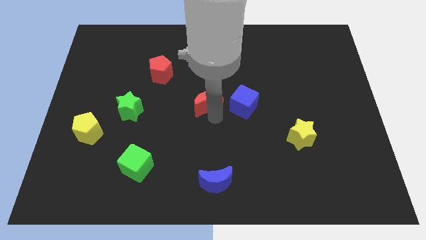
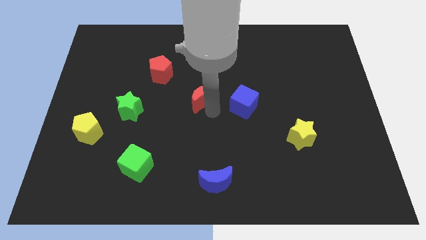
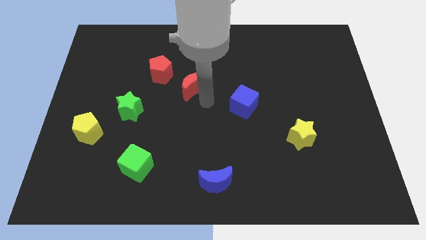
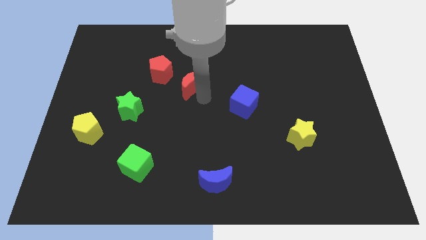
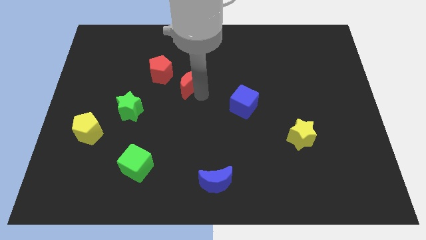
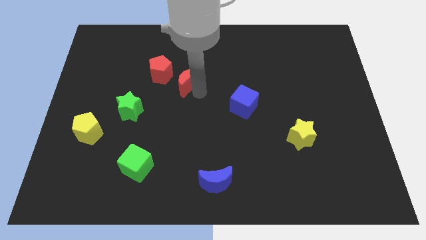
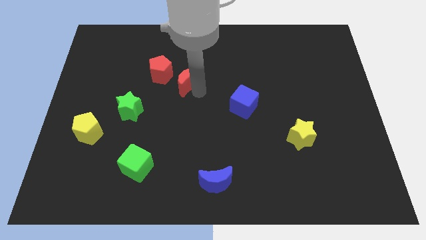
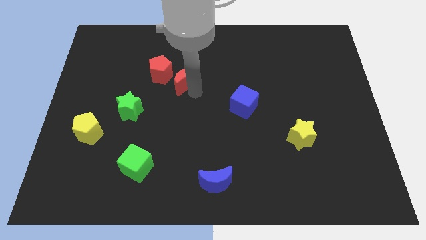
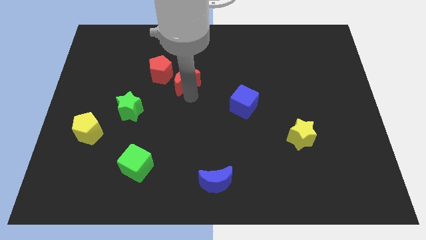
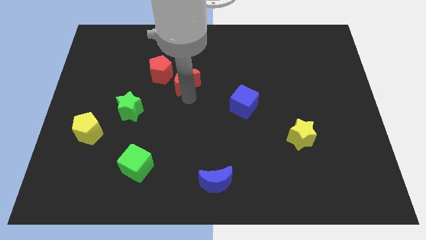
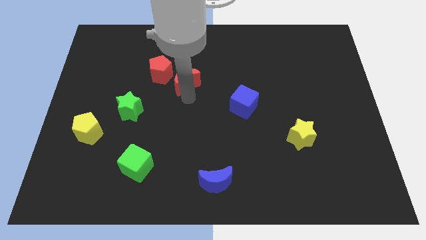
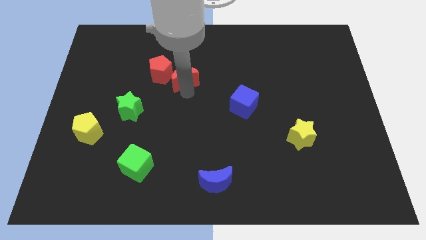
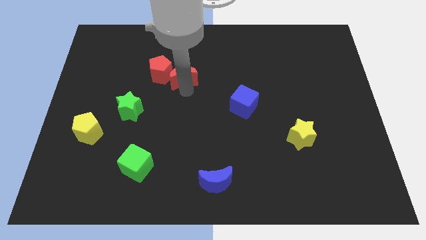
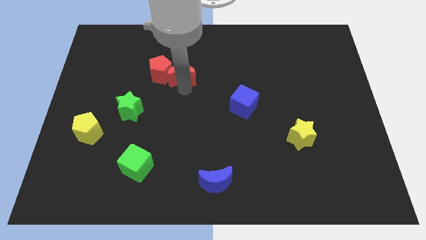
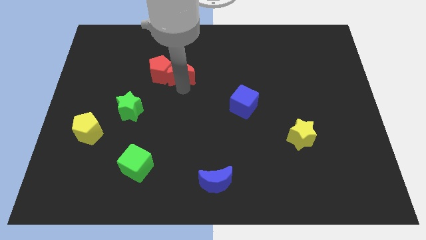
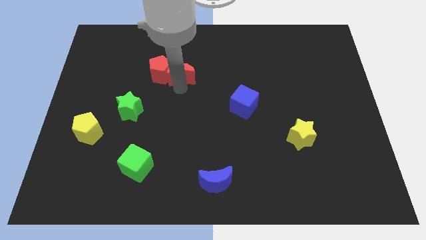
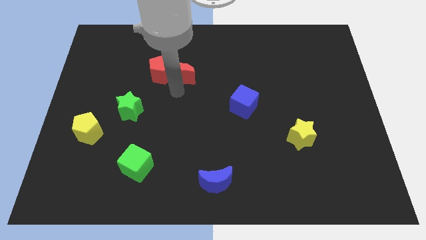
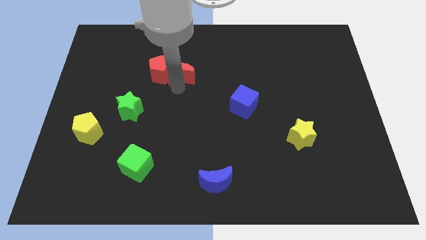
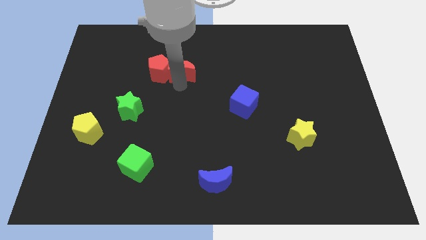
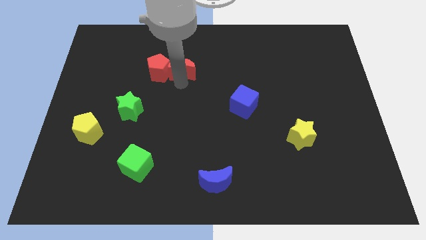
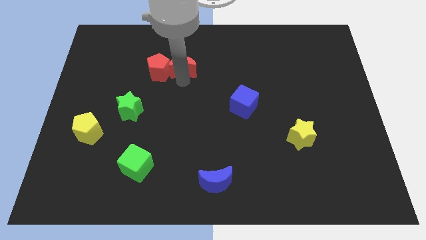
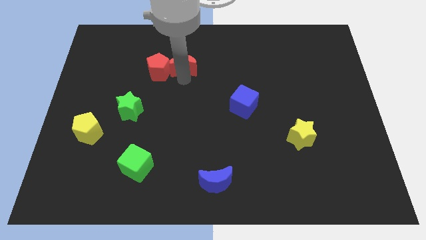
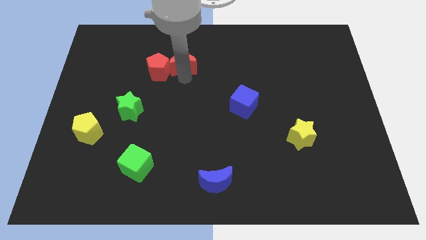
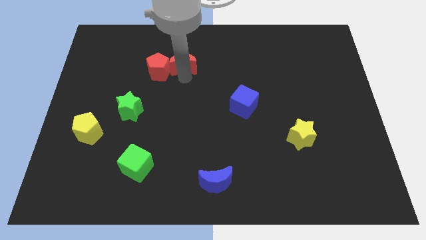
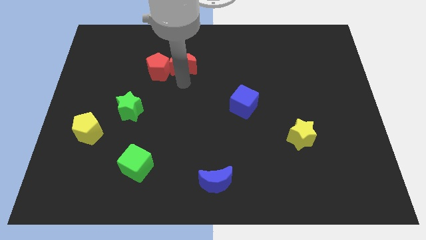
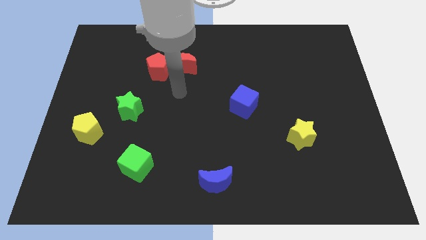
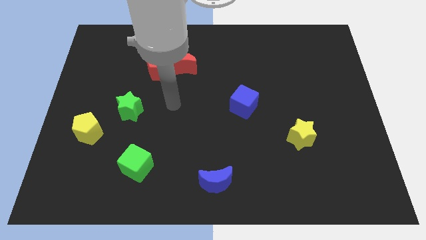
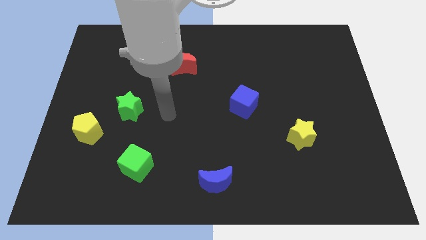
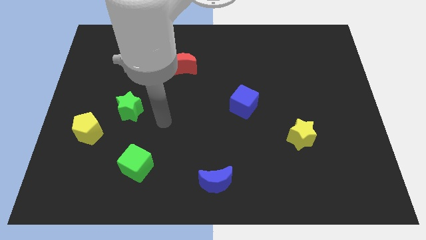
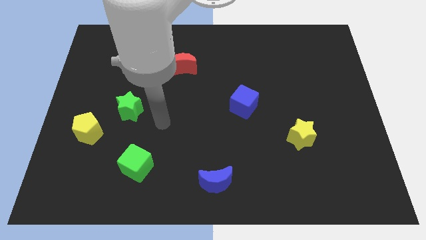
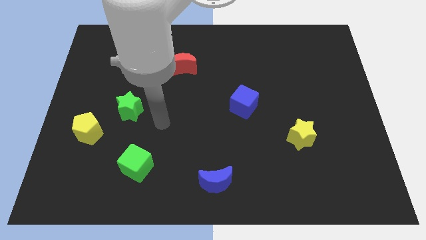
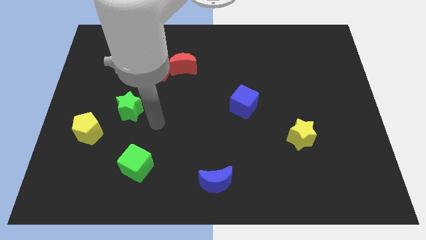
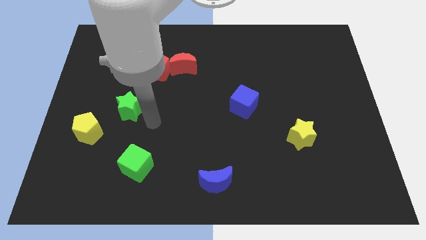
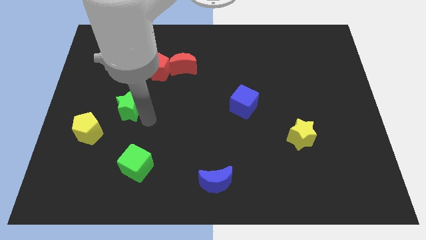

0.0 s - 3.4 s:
place the red moon to the right side of the red pentagon

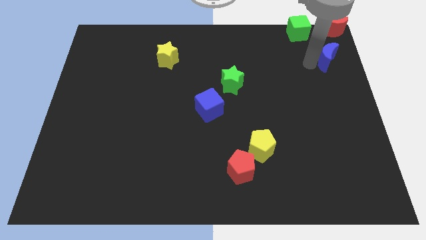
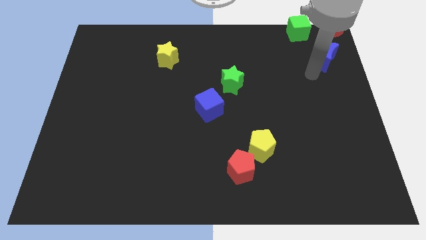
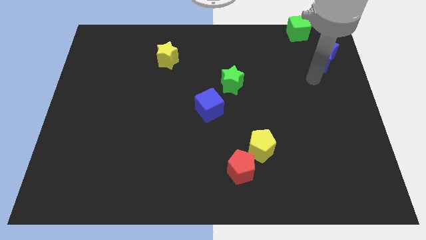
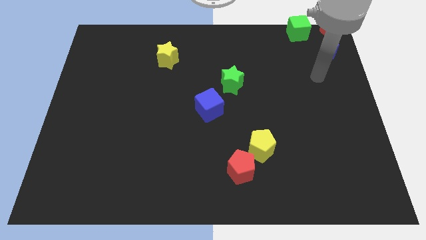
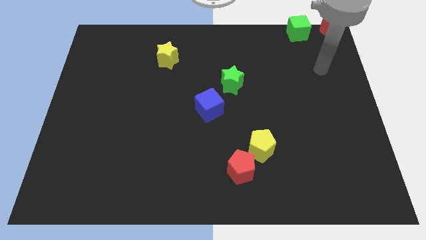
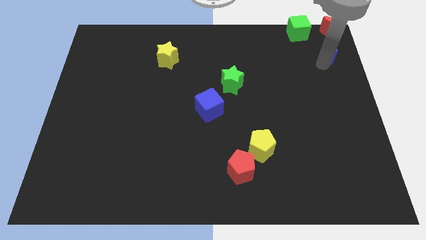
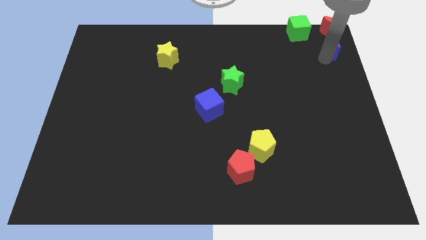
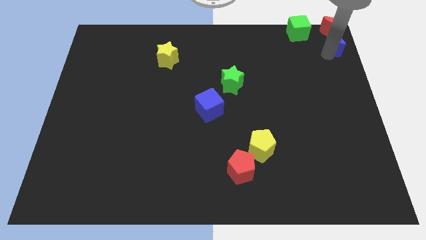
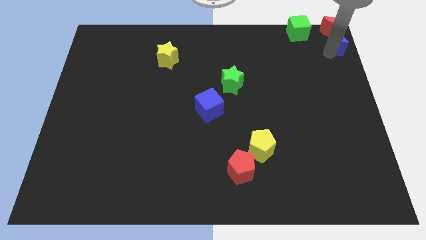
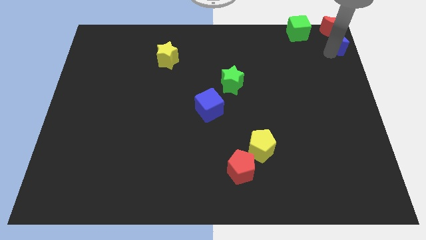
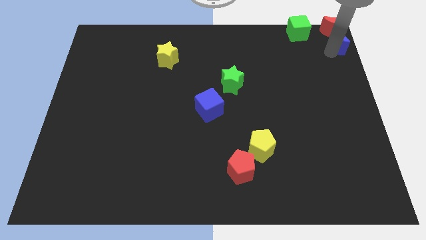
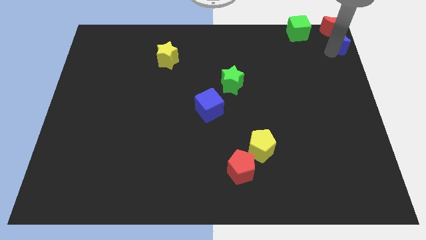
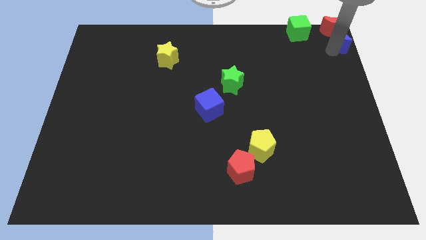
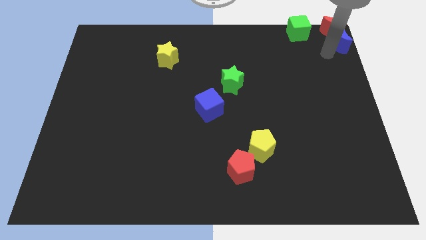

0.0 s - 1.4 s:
move the blue moon vertically below the red moon

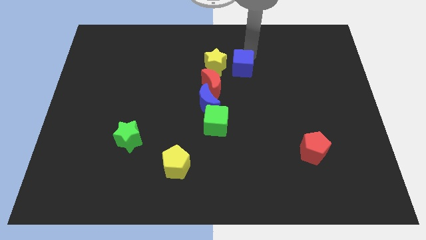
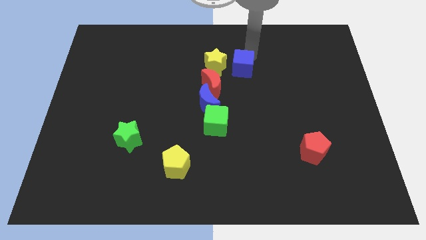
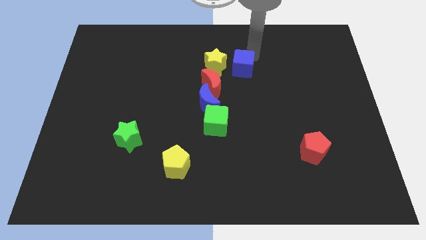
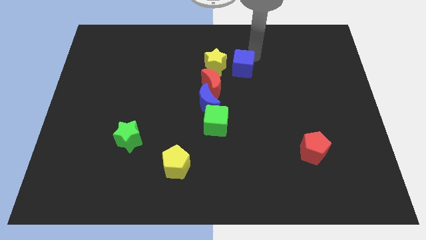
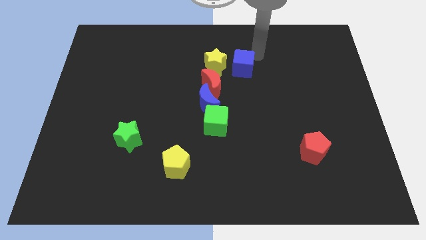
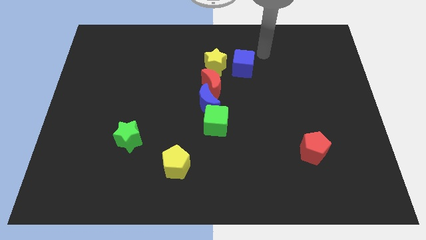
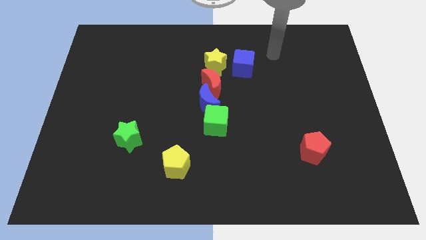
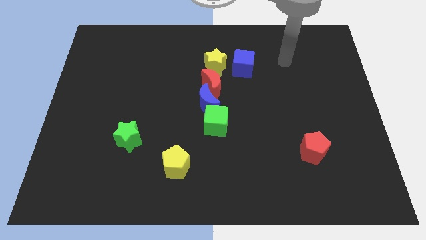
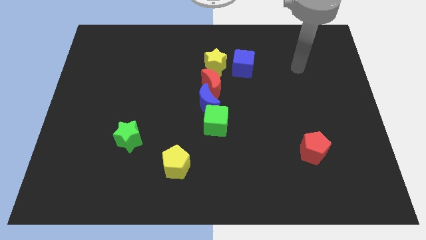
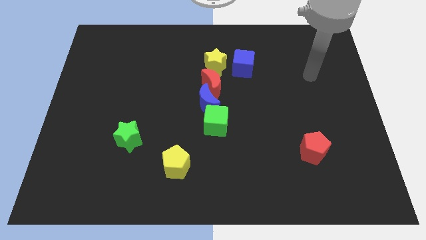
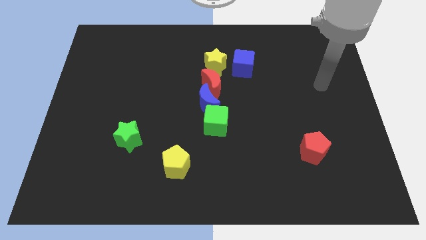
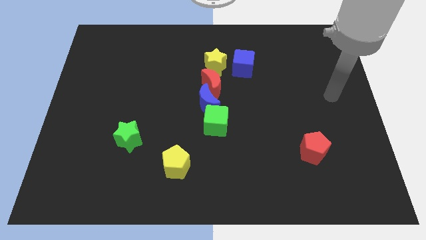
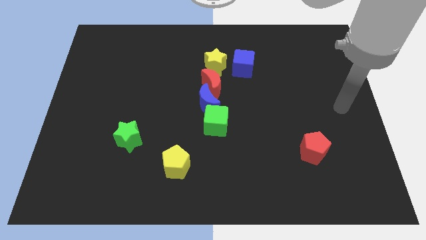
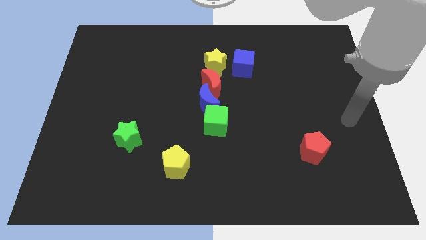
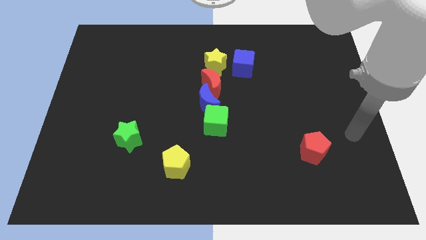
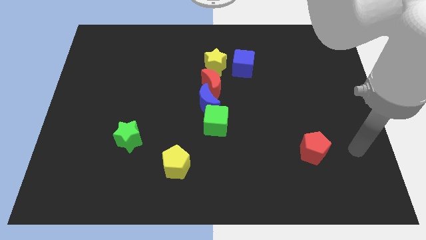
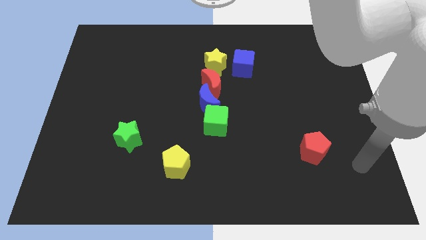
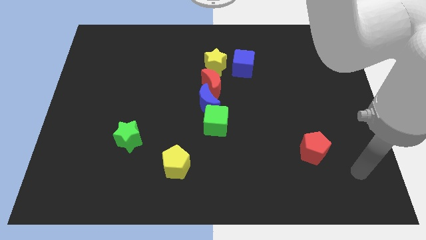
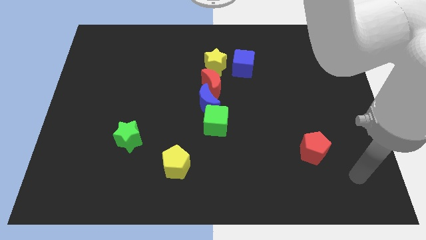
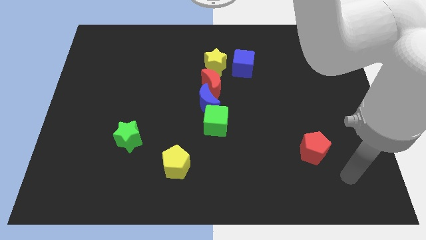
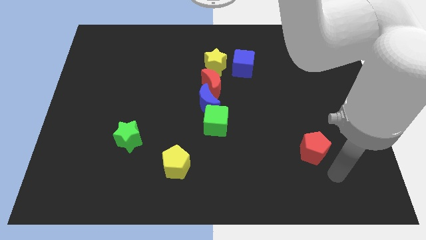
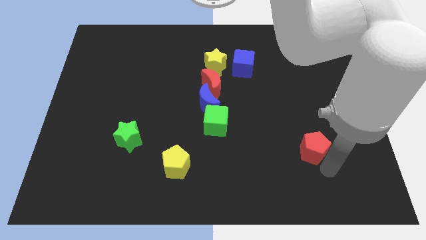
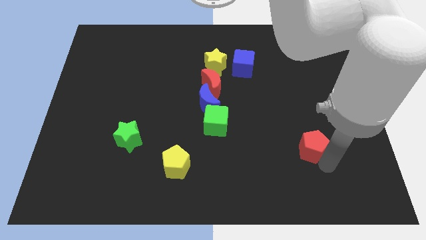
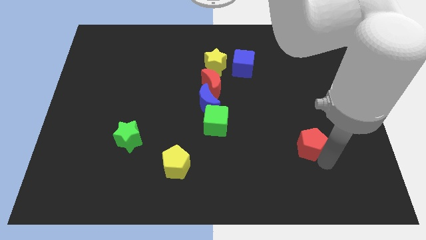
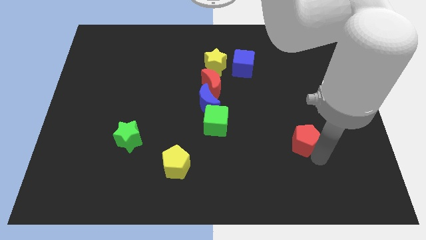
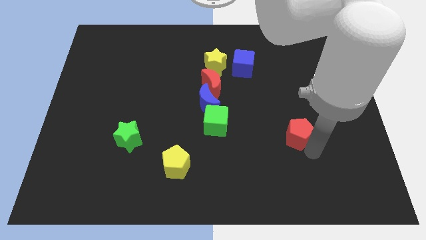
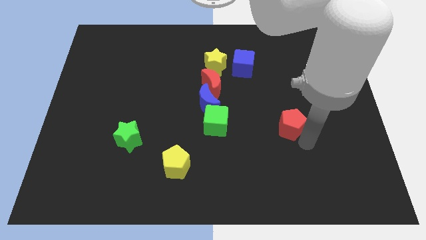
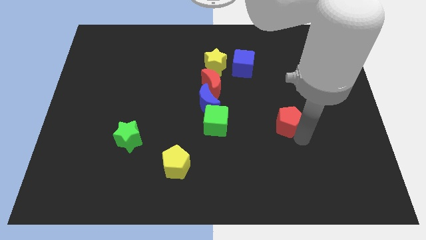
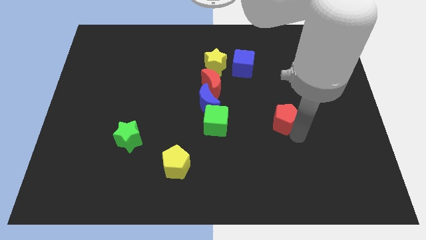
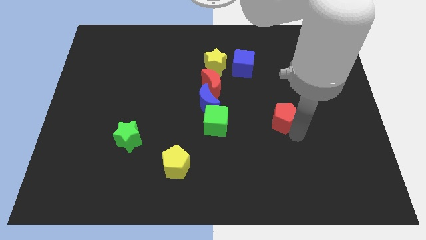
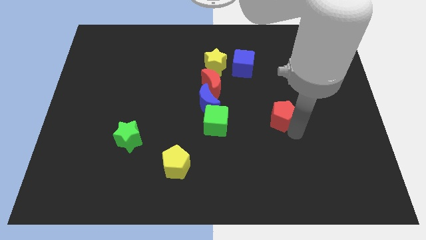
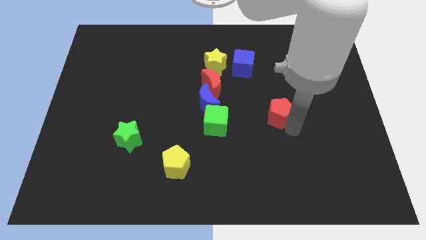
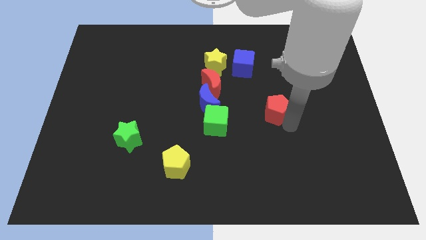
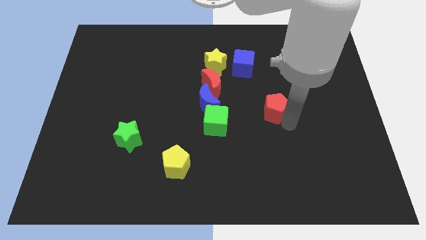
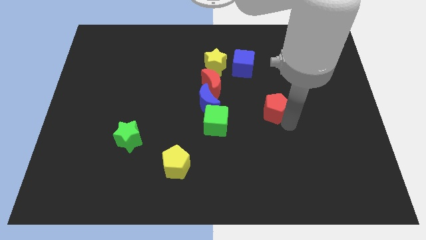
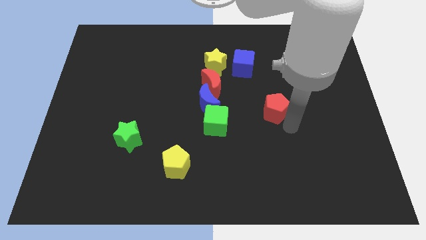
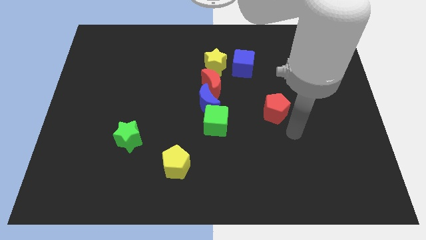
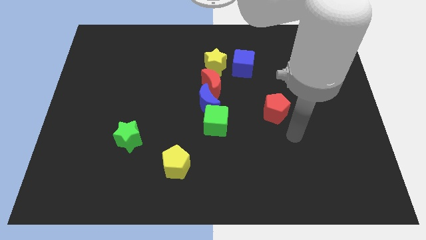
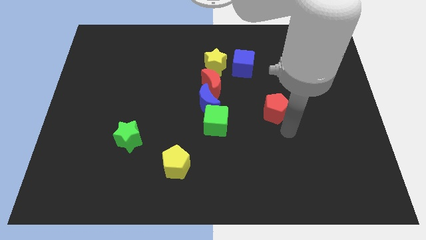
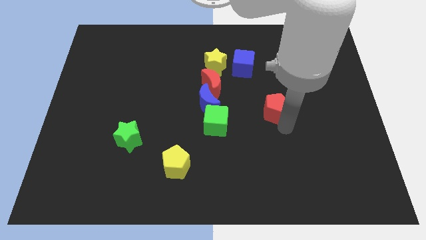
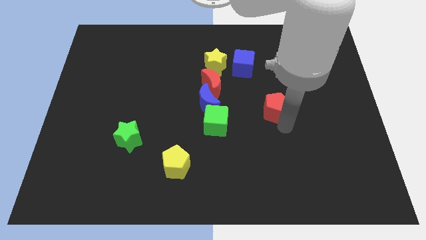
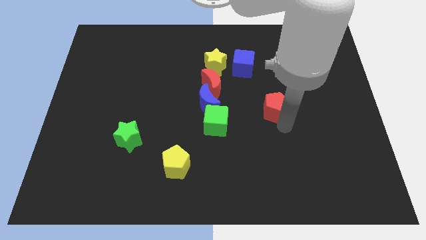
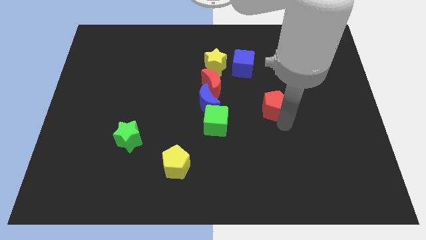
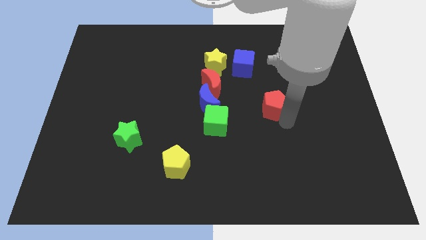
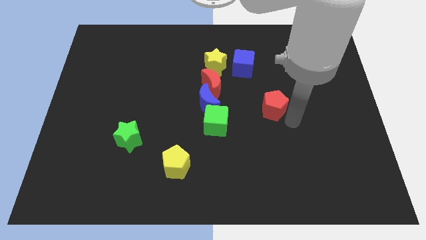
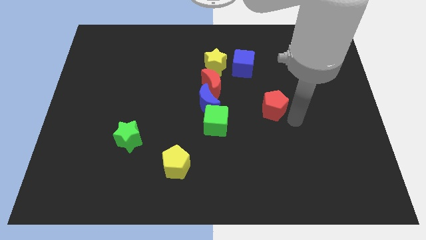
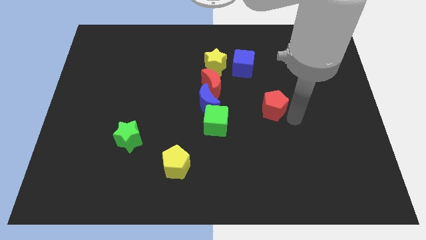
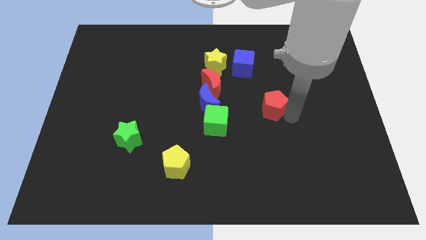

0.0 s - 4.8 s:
move the red pentagon to the top right of the green cube
